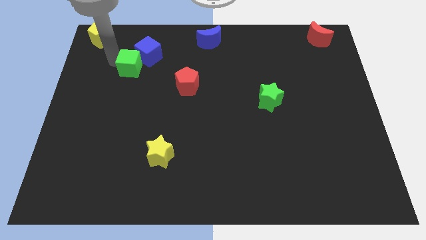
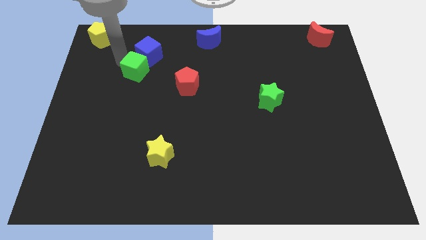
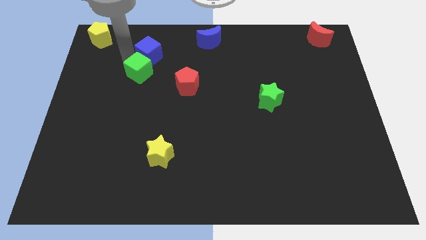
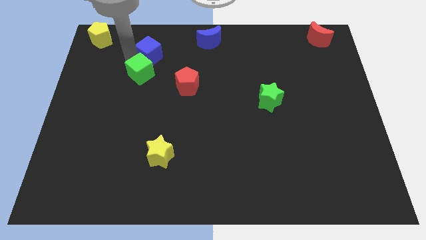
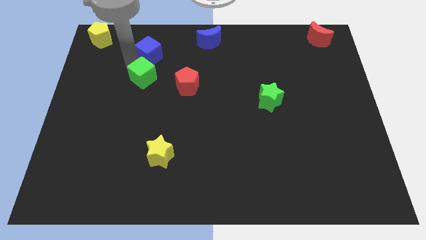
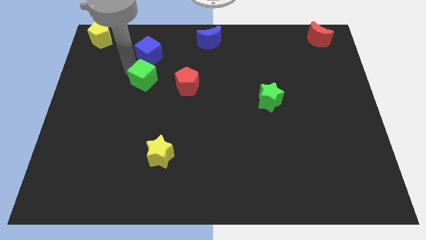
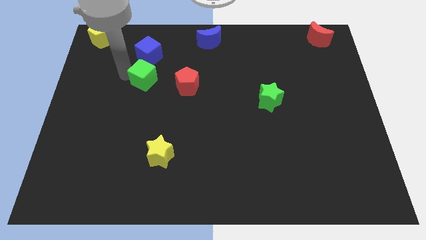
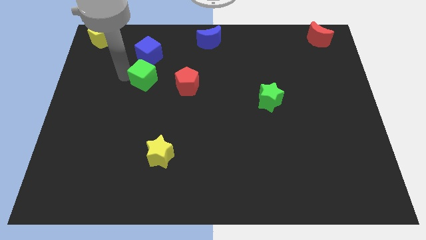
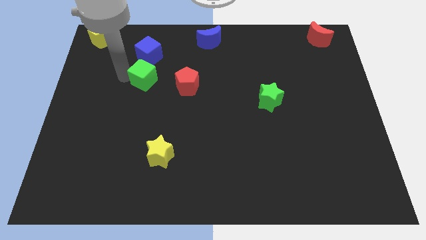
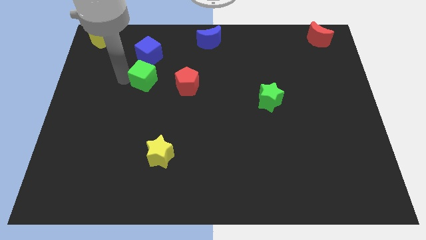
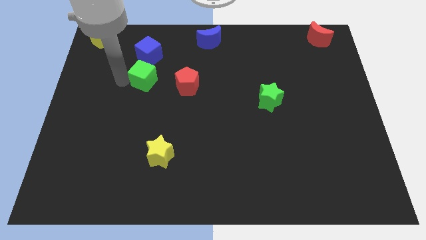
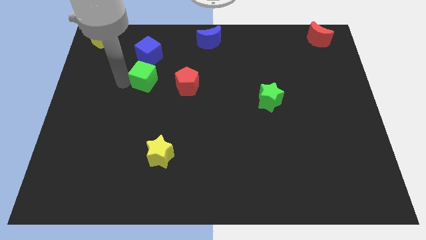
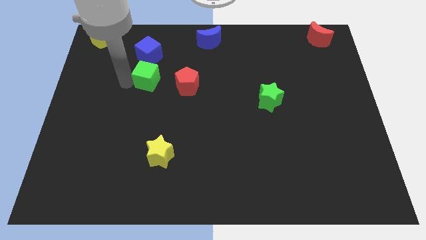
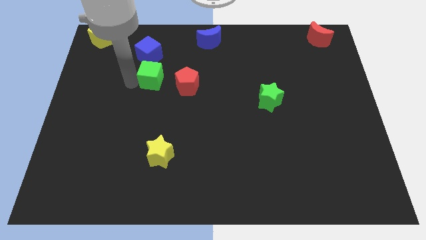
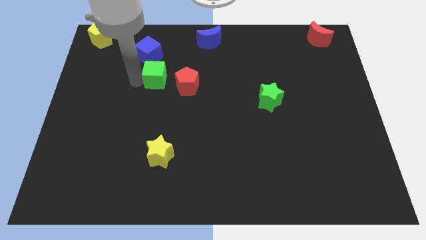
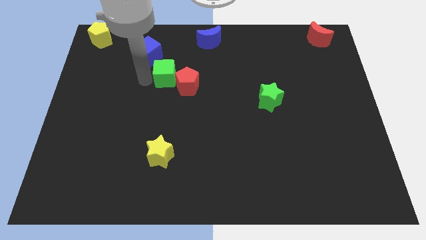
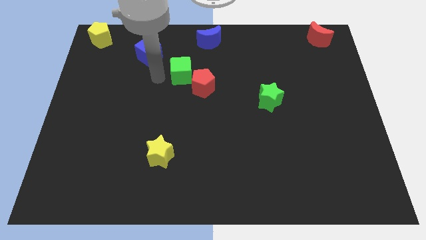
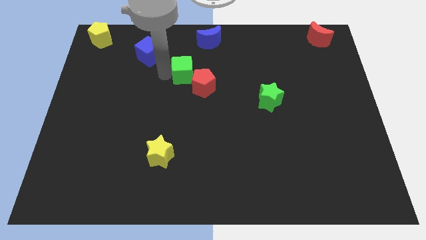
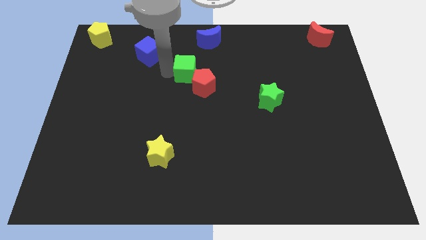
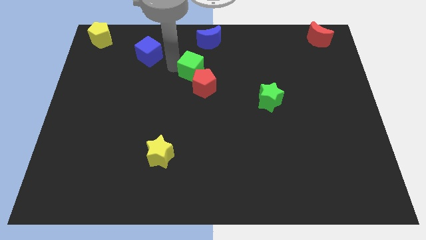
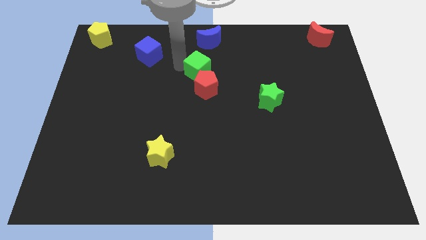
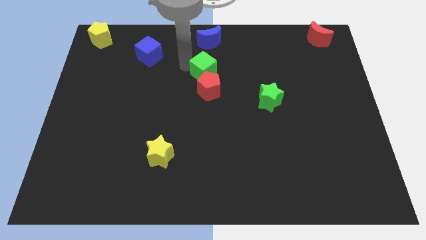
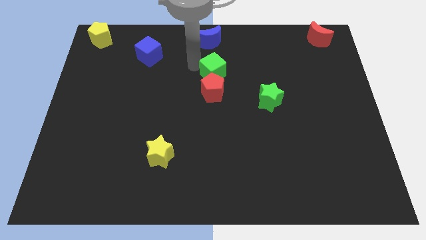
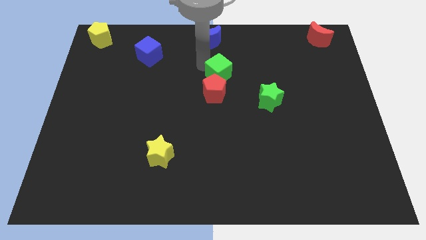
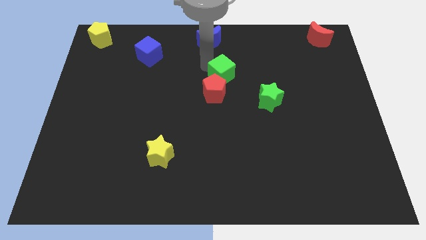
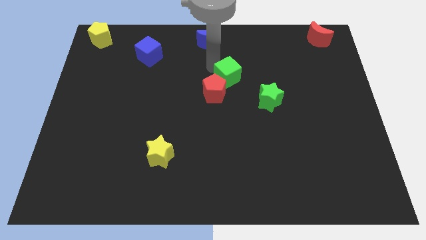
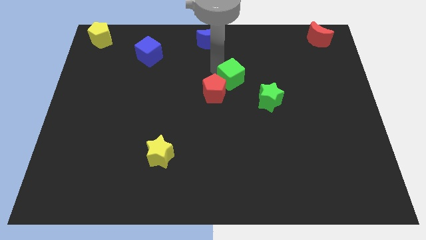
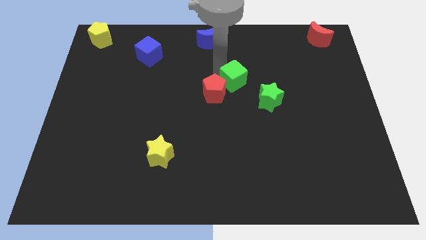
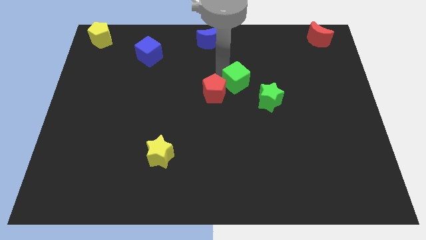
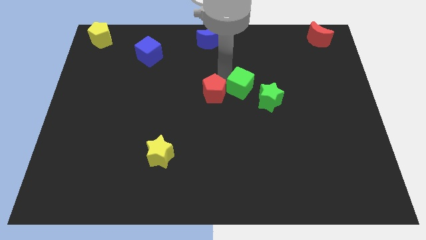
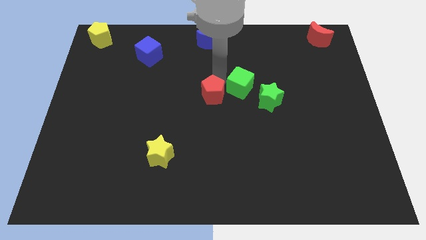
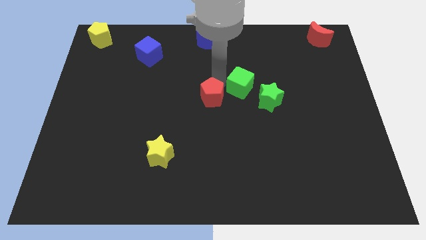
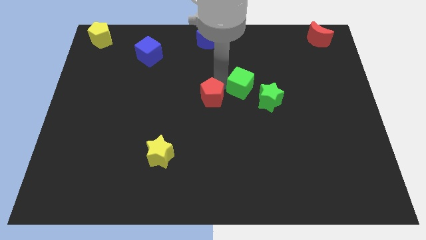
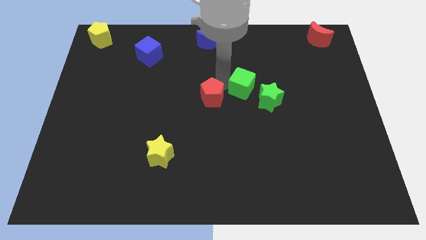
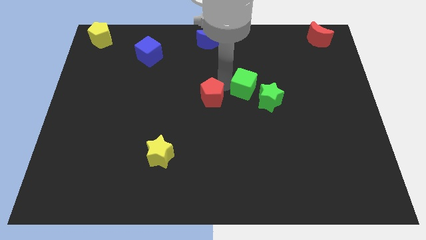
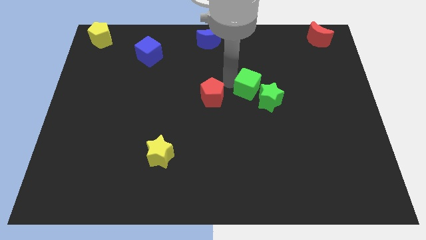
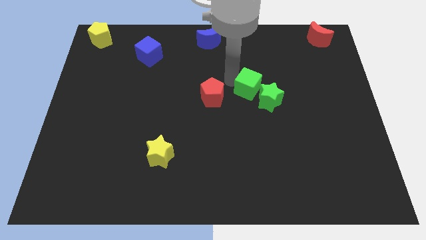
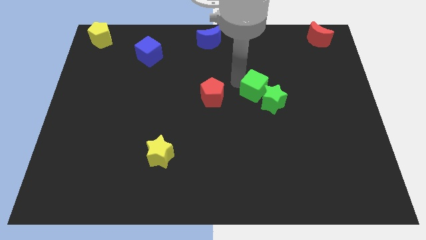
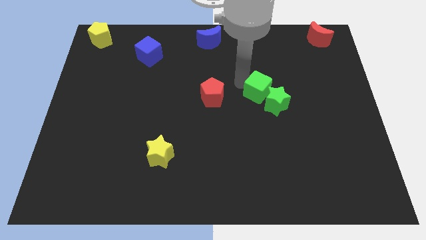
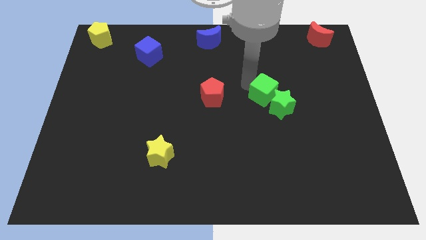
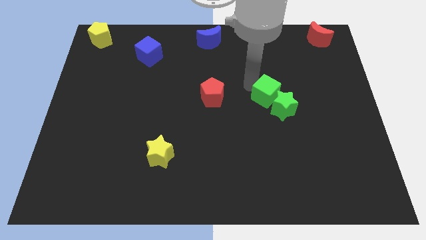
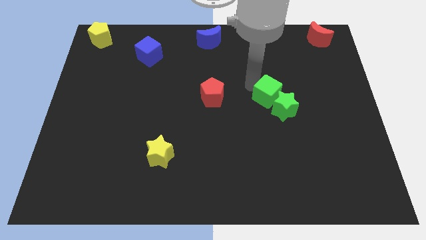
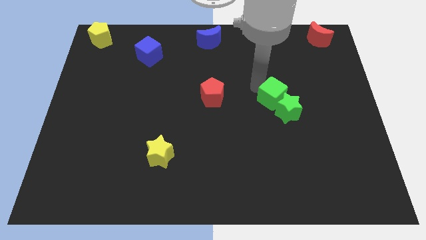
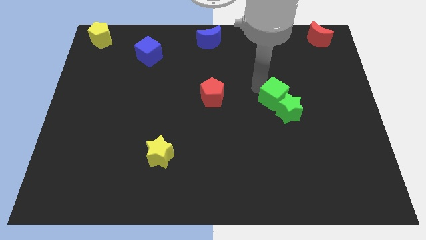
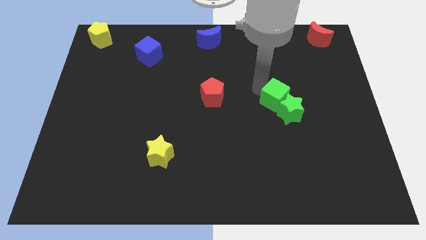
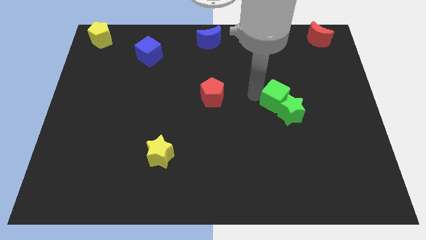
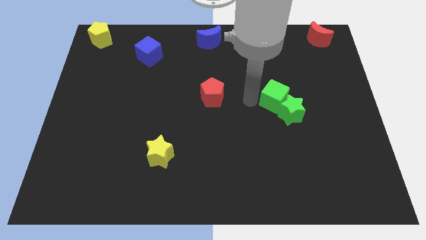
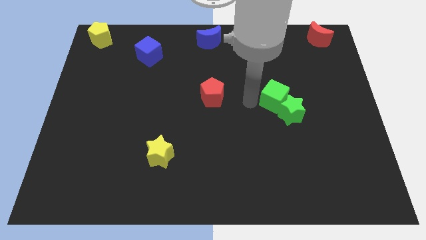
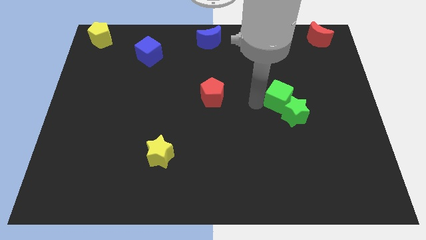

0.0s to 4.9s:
push the green cube into the green star

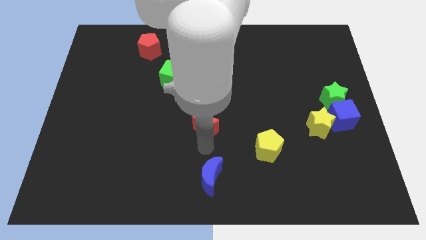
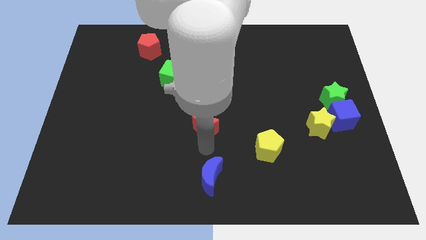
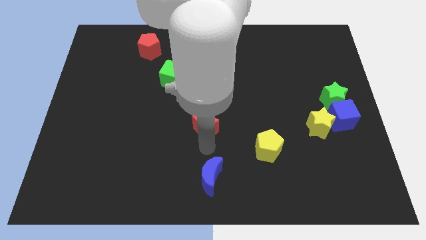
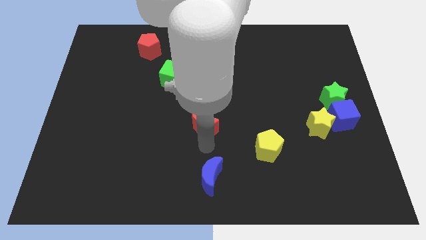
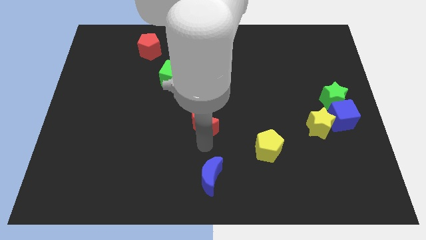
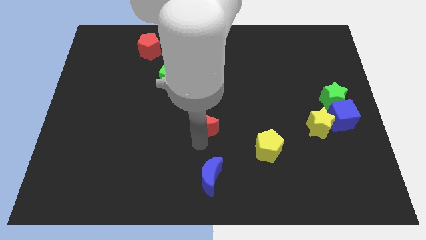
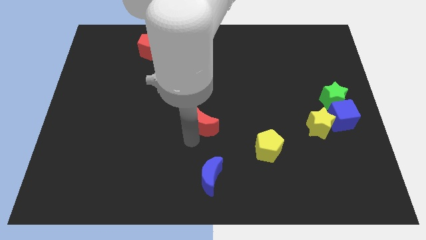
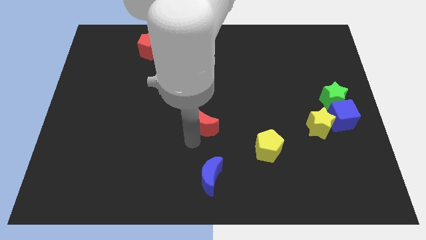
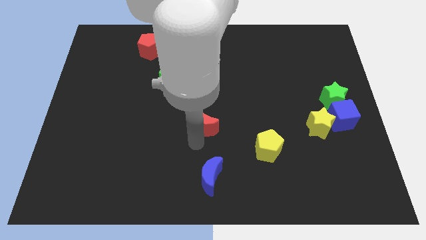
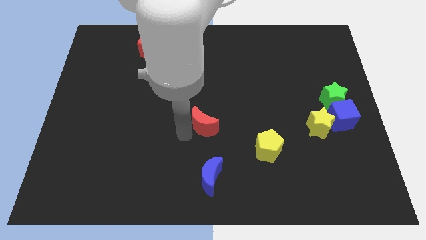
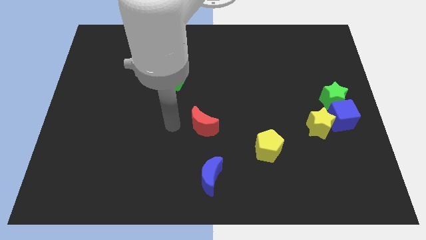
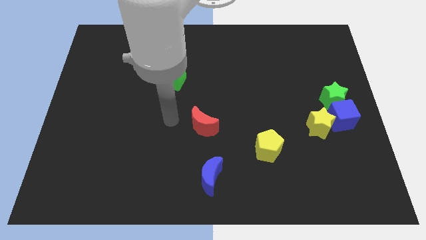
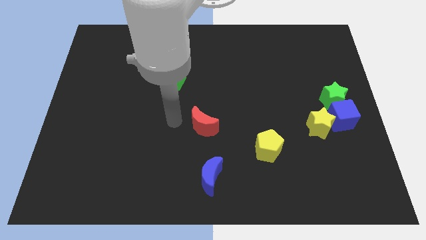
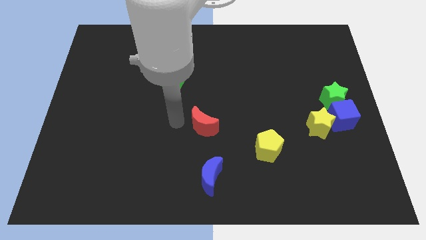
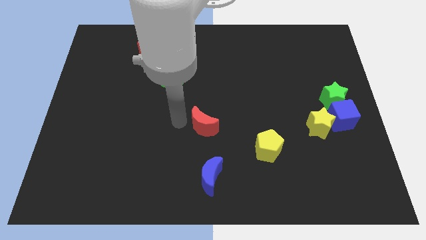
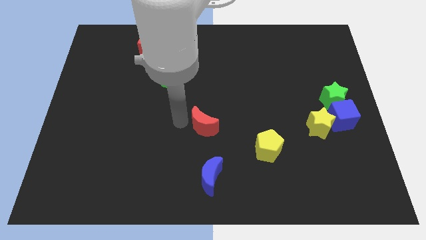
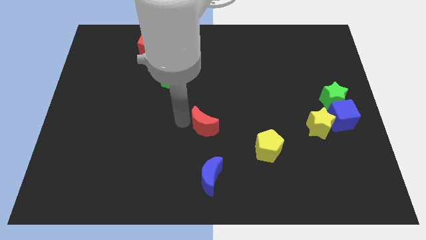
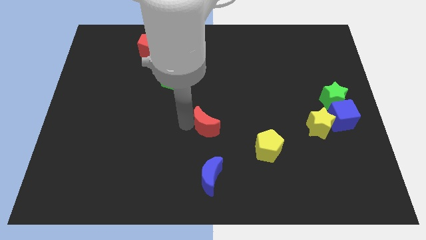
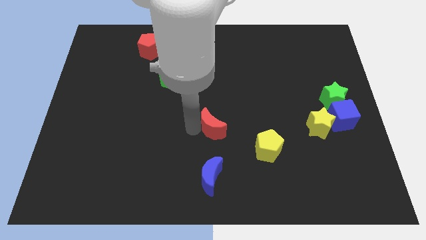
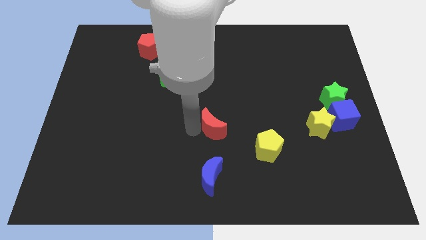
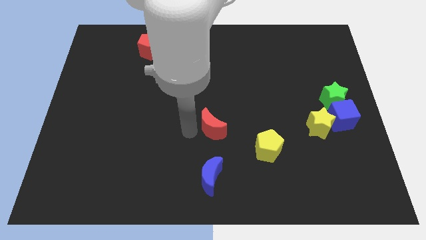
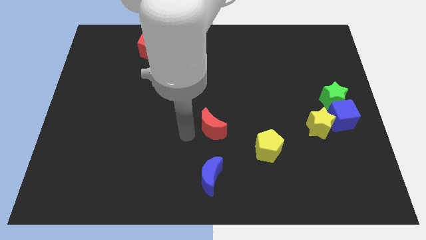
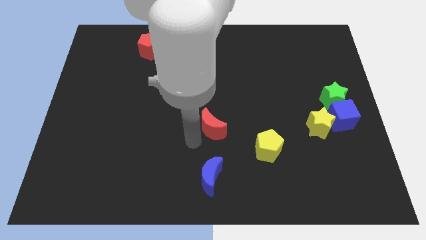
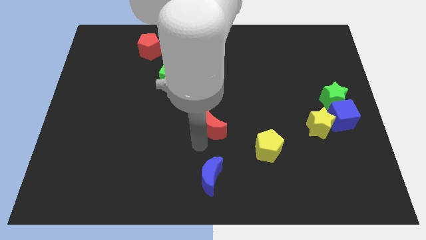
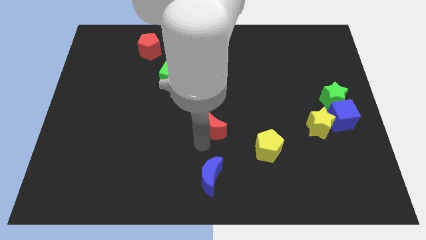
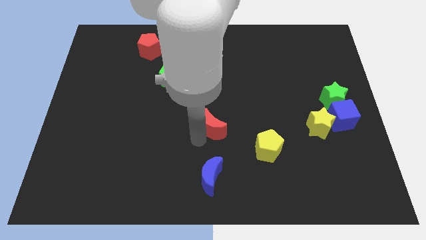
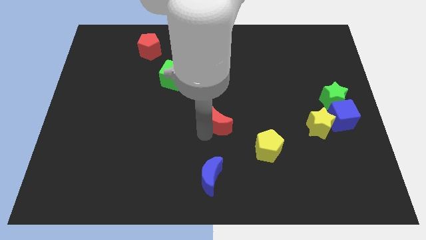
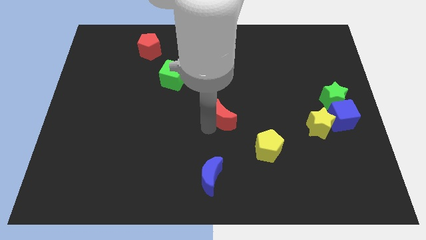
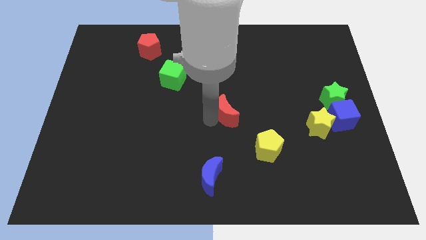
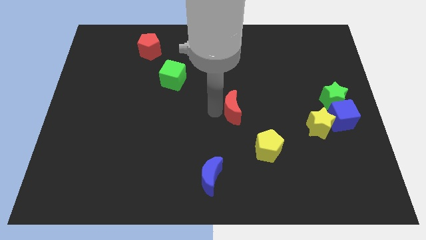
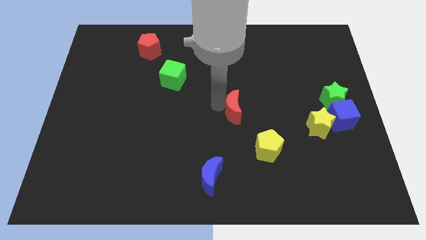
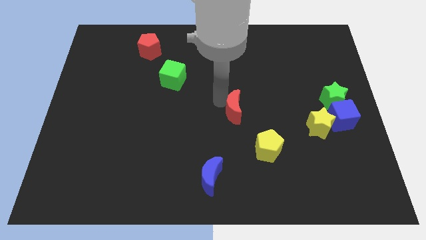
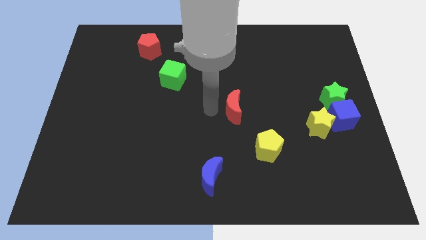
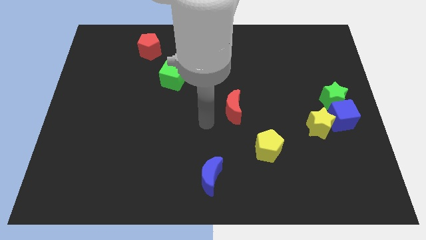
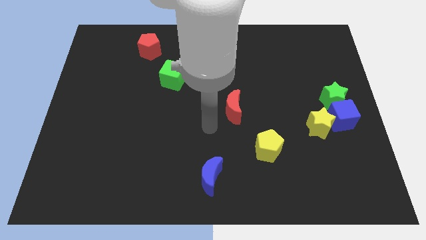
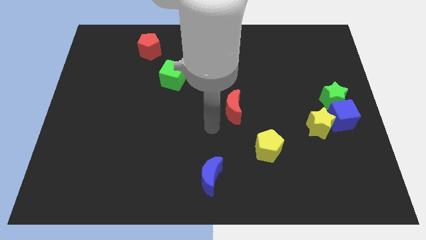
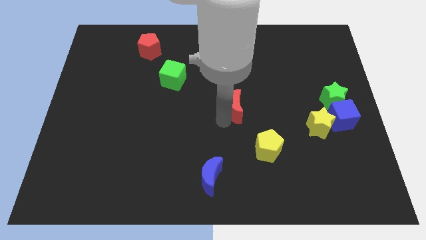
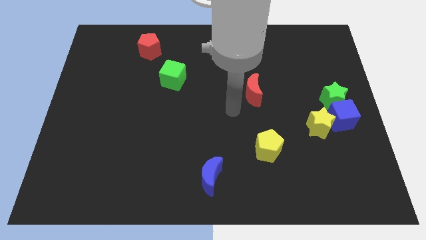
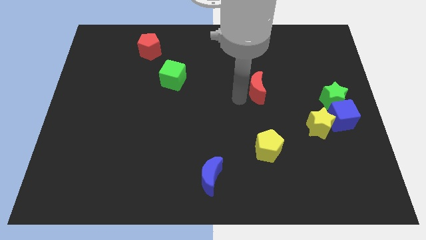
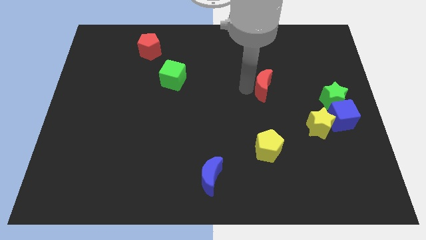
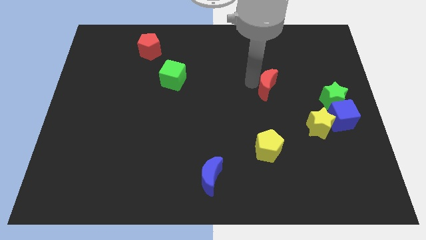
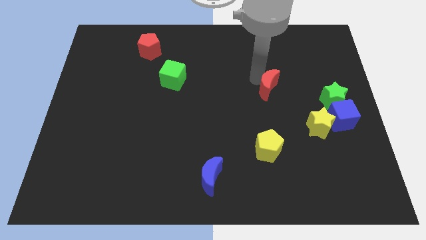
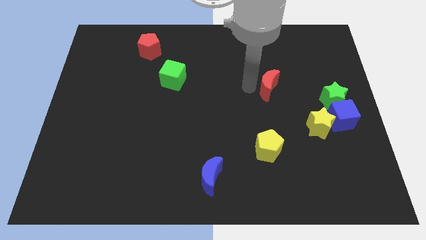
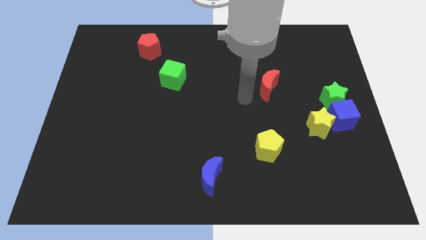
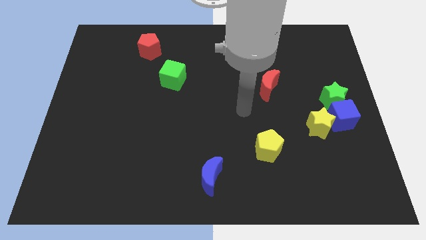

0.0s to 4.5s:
move red crescent to the left of green star
